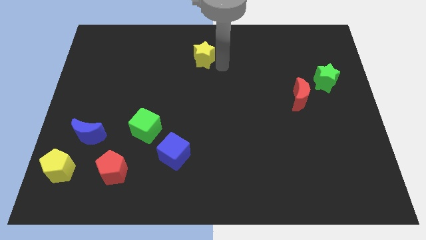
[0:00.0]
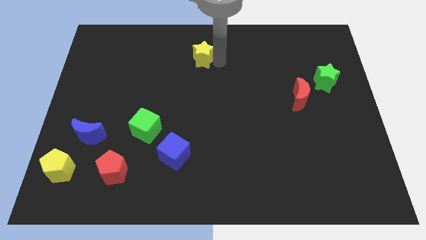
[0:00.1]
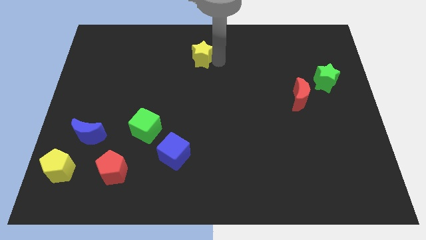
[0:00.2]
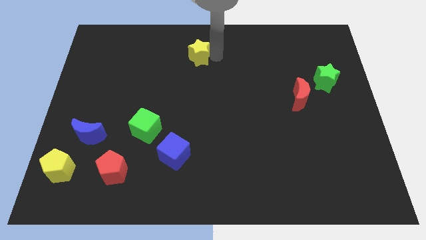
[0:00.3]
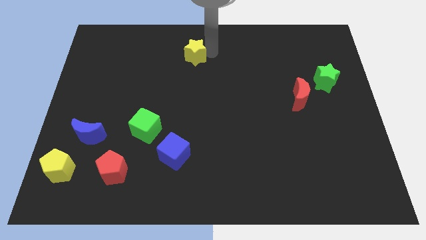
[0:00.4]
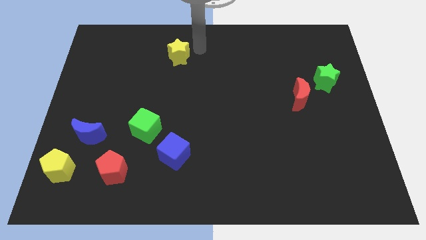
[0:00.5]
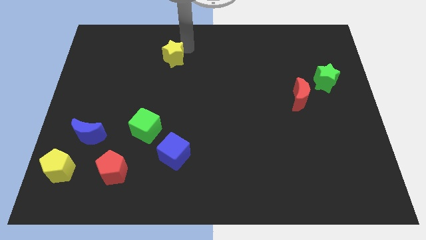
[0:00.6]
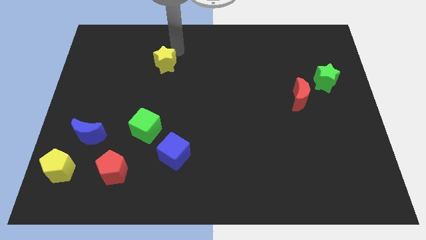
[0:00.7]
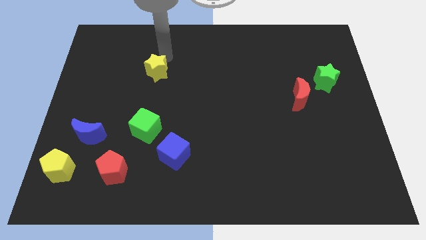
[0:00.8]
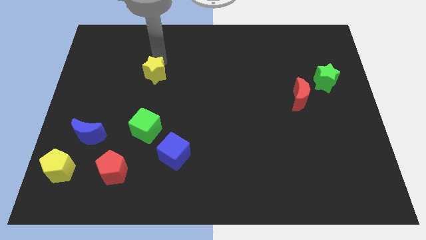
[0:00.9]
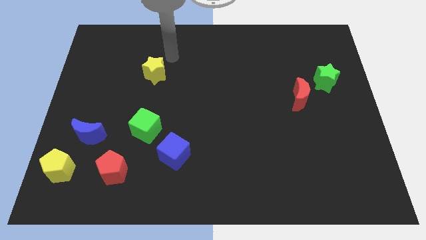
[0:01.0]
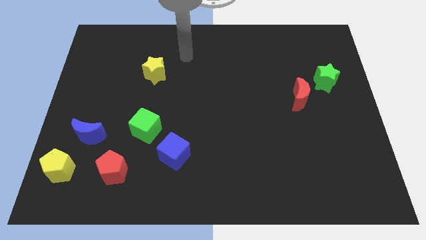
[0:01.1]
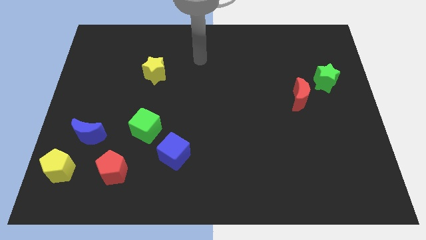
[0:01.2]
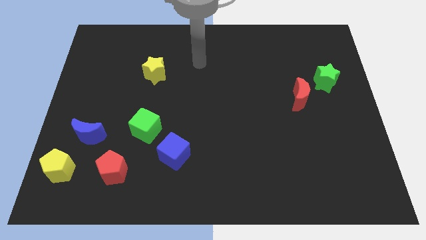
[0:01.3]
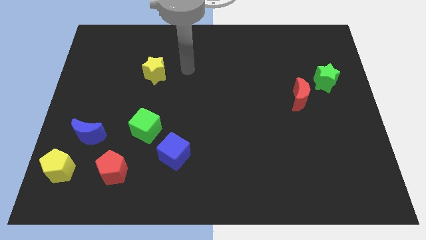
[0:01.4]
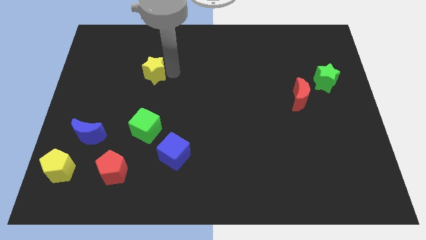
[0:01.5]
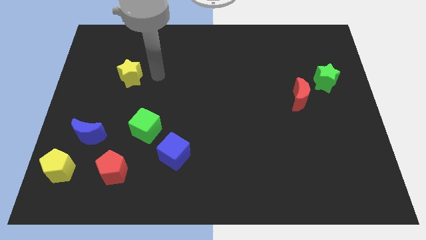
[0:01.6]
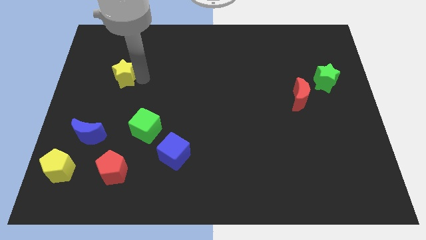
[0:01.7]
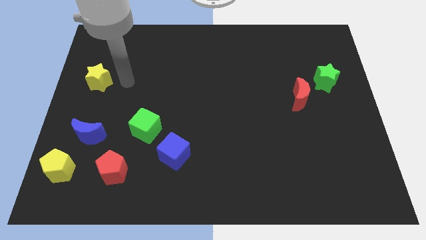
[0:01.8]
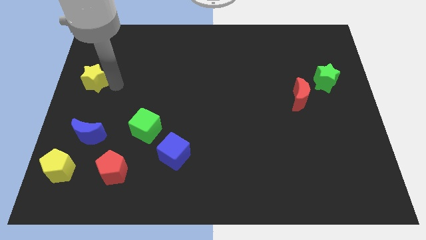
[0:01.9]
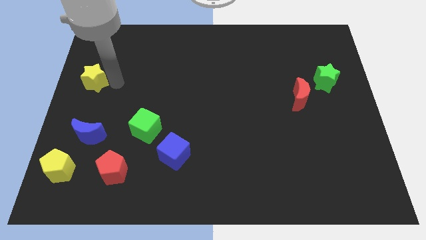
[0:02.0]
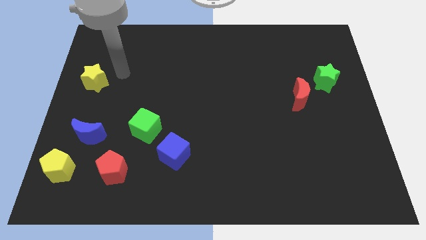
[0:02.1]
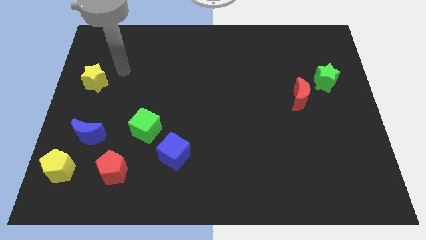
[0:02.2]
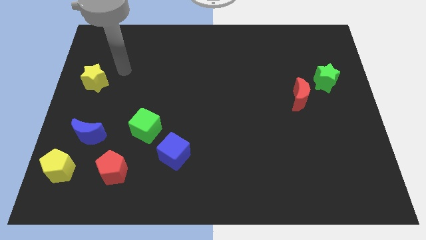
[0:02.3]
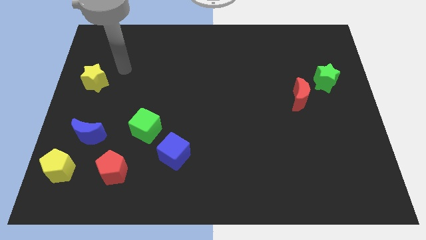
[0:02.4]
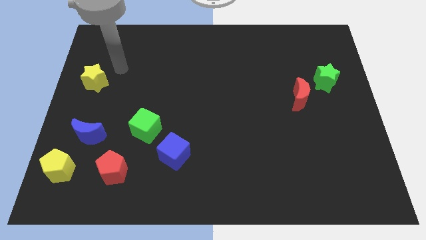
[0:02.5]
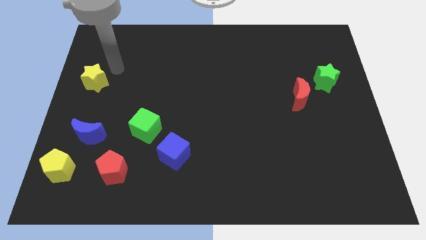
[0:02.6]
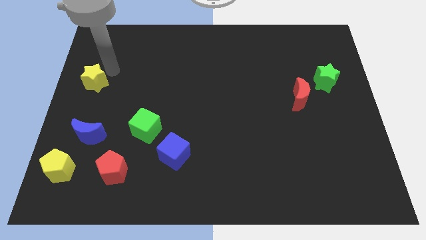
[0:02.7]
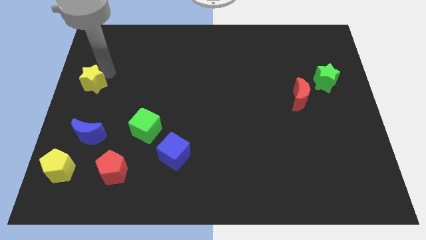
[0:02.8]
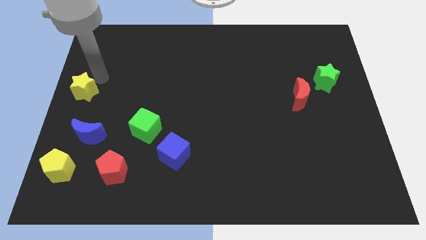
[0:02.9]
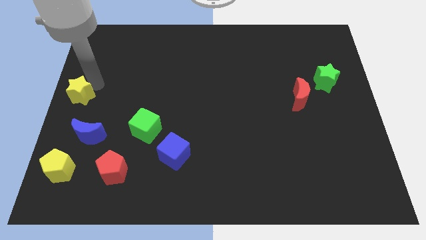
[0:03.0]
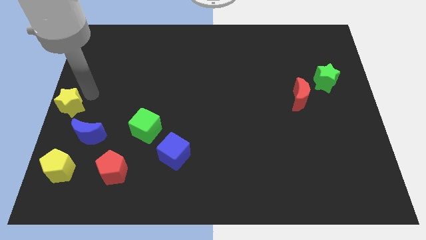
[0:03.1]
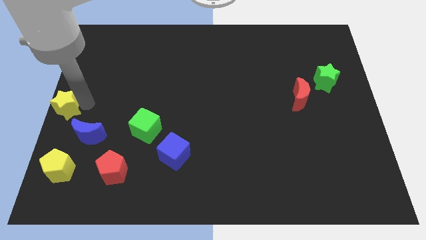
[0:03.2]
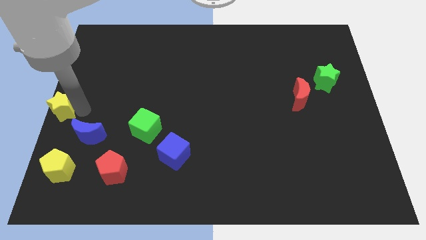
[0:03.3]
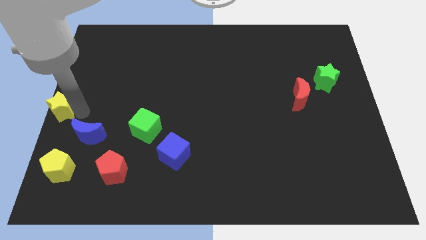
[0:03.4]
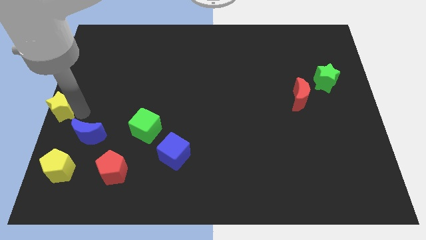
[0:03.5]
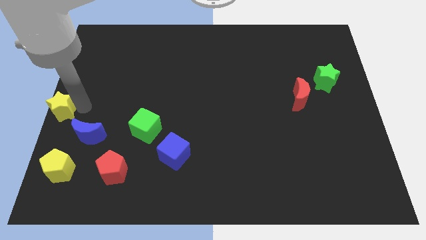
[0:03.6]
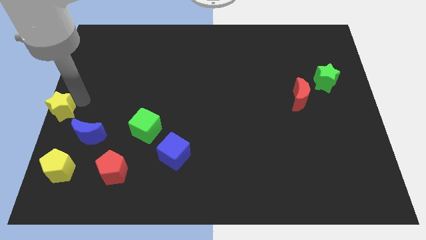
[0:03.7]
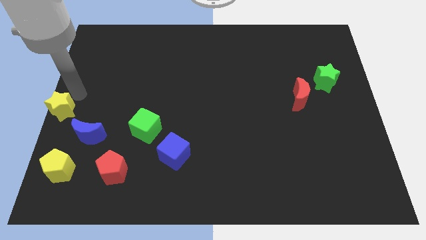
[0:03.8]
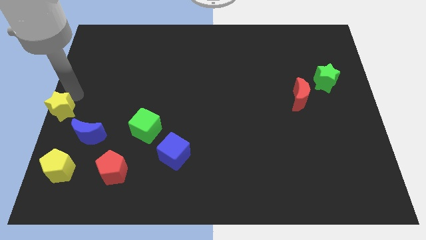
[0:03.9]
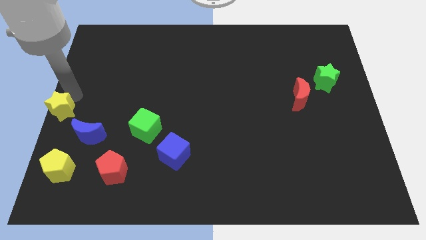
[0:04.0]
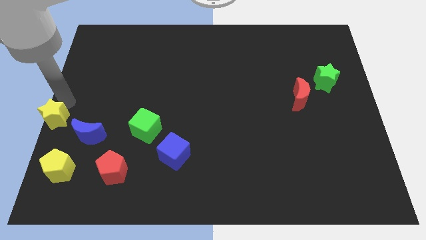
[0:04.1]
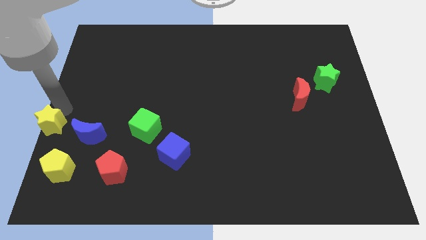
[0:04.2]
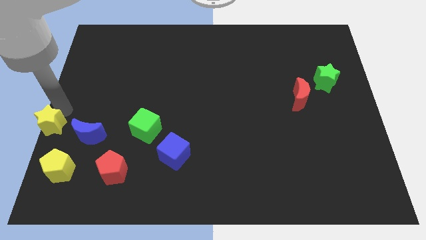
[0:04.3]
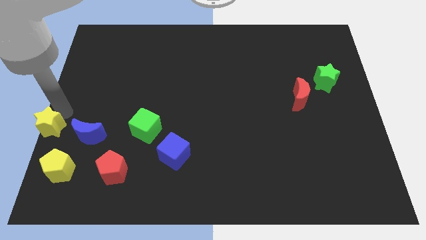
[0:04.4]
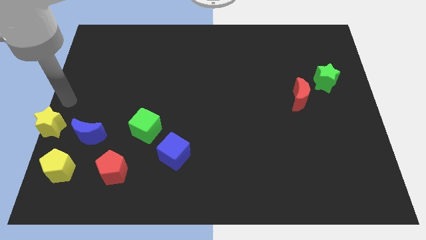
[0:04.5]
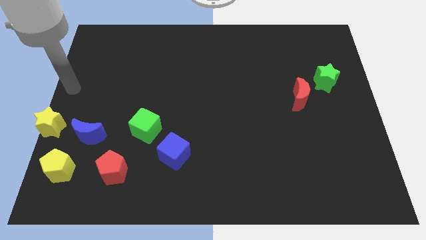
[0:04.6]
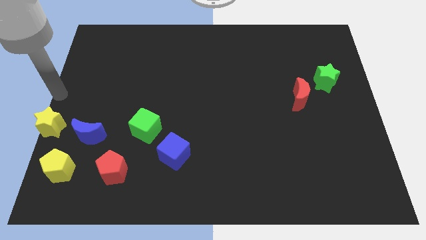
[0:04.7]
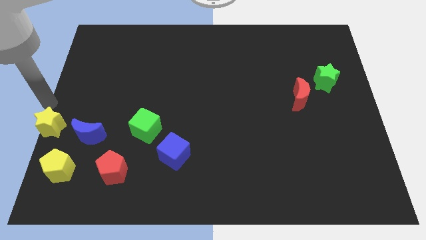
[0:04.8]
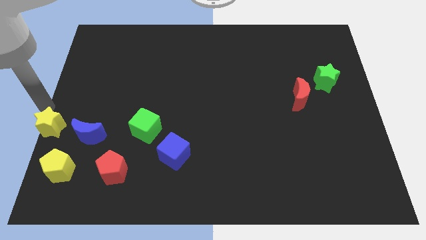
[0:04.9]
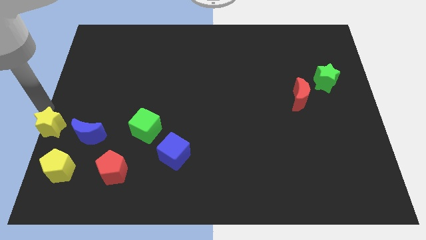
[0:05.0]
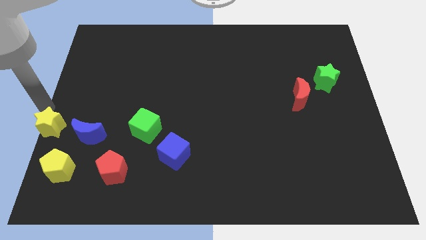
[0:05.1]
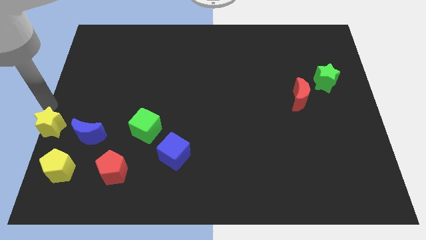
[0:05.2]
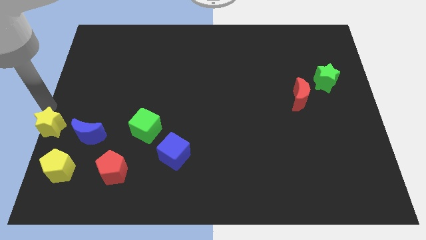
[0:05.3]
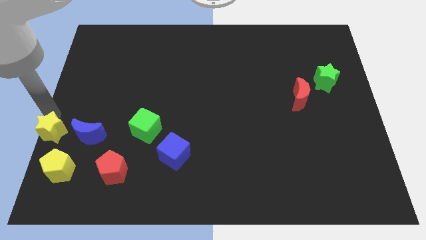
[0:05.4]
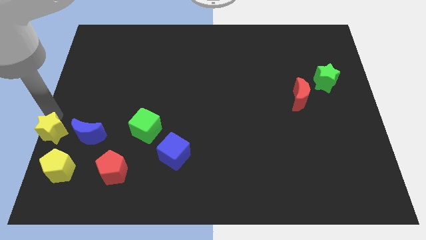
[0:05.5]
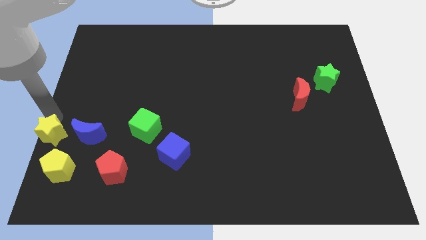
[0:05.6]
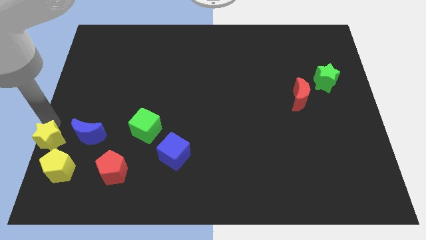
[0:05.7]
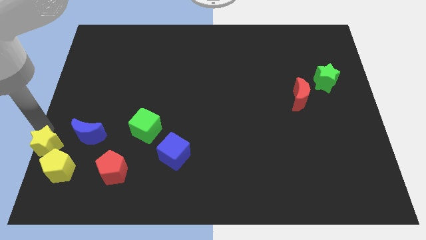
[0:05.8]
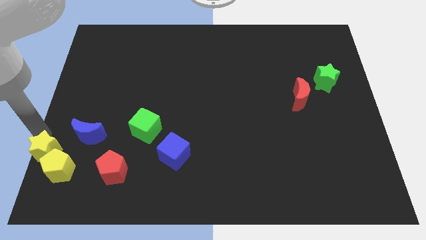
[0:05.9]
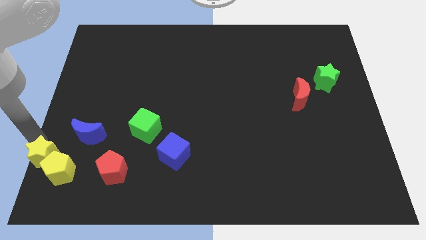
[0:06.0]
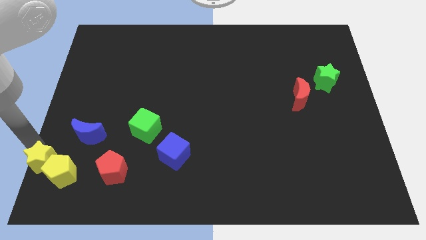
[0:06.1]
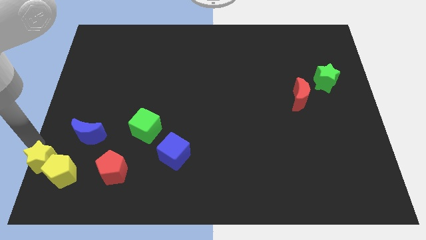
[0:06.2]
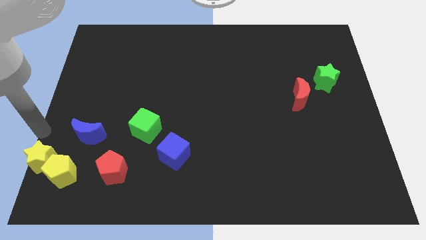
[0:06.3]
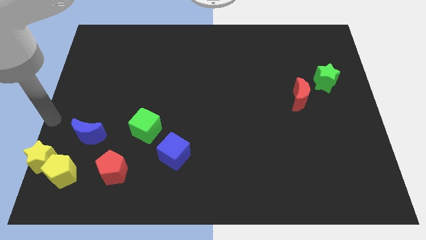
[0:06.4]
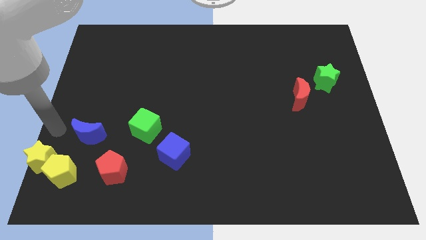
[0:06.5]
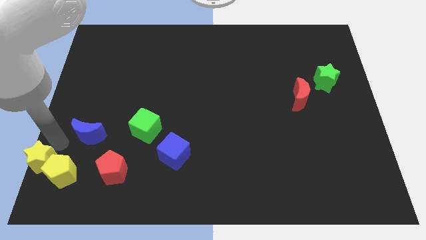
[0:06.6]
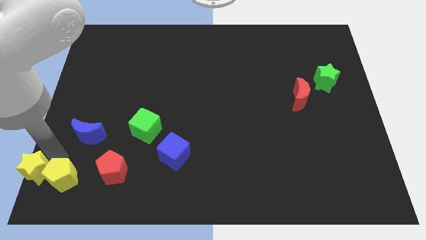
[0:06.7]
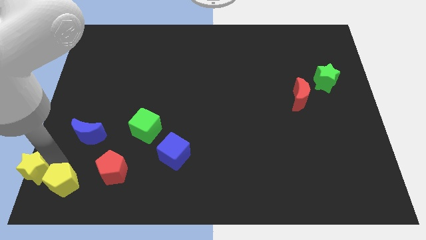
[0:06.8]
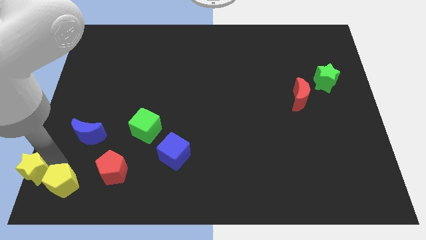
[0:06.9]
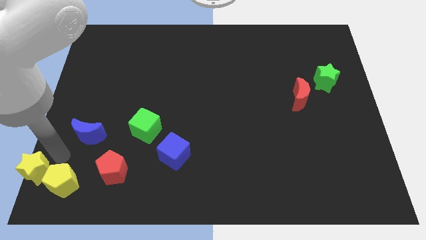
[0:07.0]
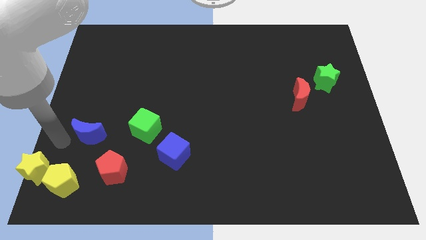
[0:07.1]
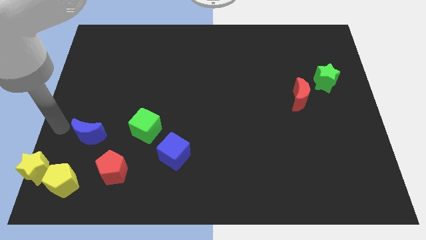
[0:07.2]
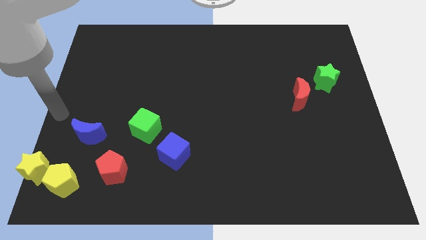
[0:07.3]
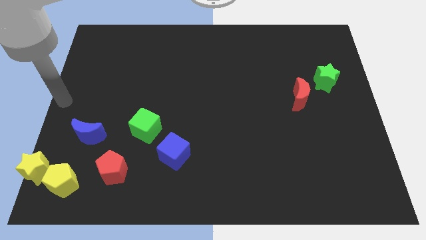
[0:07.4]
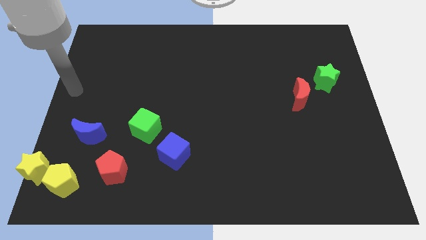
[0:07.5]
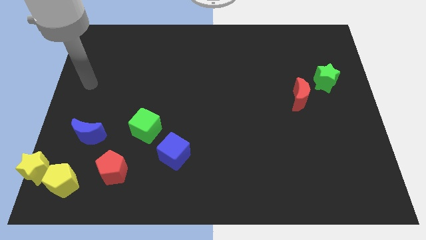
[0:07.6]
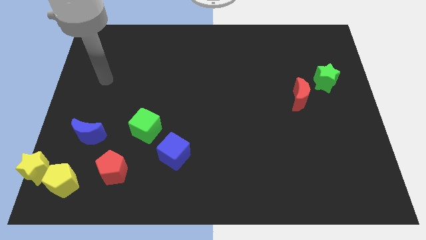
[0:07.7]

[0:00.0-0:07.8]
push the yellow star to the left bottom corner of the board

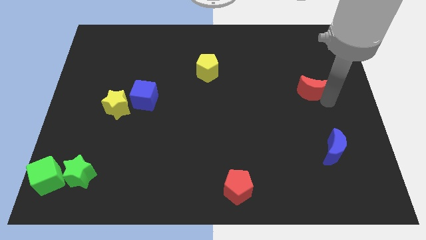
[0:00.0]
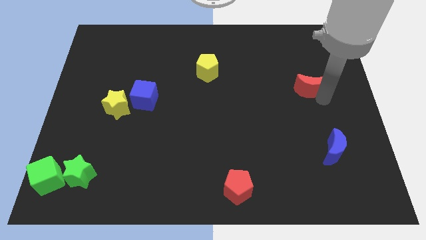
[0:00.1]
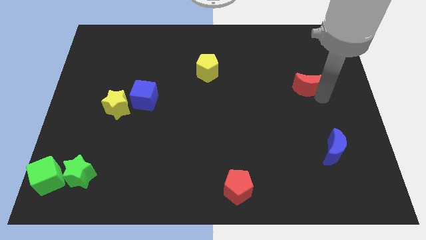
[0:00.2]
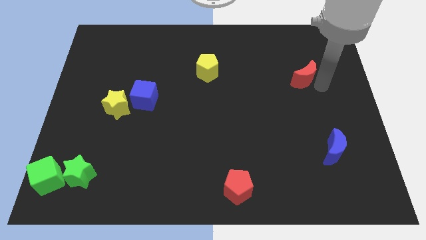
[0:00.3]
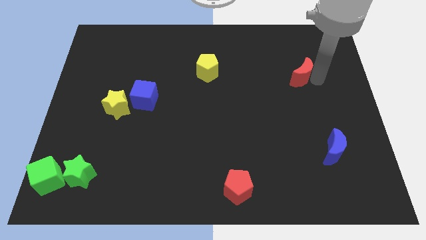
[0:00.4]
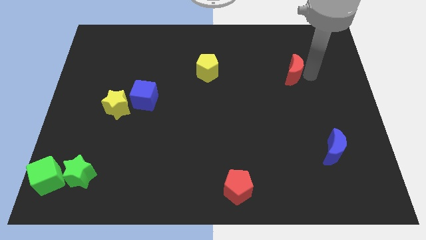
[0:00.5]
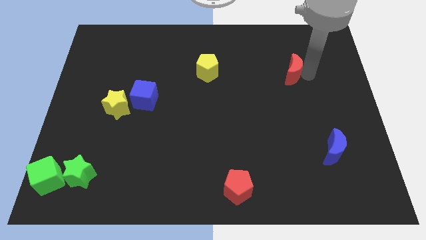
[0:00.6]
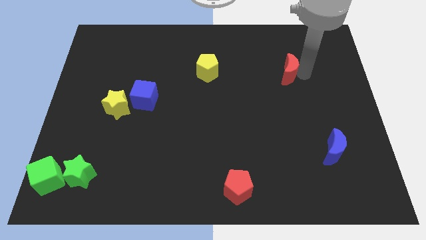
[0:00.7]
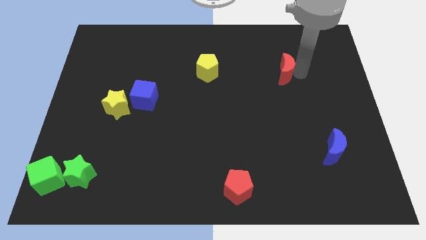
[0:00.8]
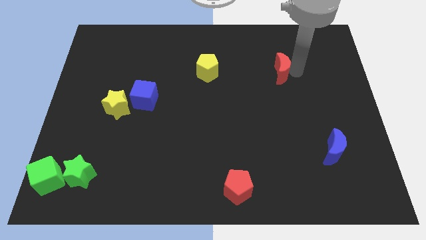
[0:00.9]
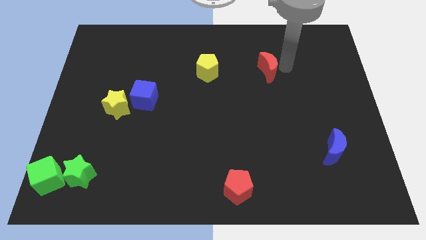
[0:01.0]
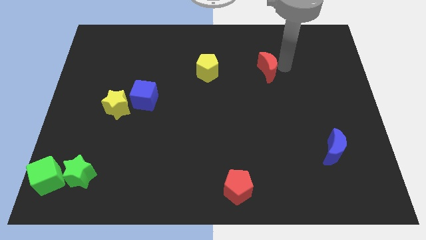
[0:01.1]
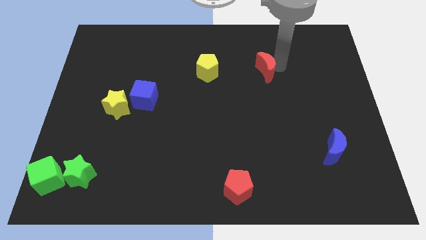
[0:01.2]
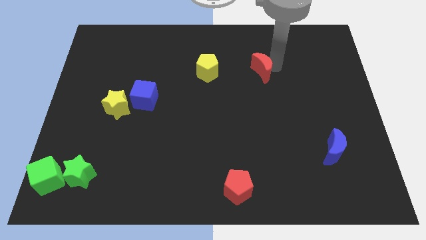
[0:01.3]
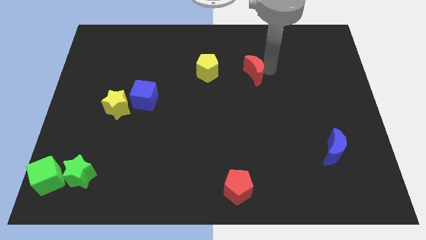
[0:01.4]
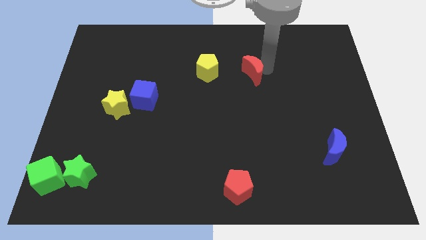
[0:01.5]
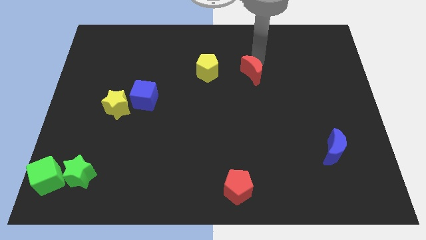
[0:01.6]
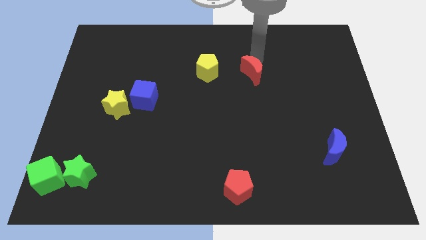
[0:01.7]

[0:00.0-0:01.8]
place red moon to the right of yellow pentagon
